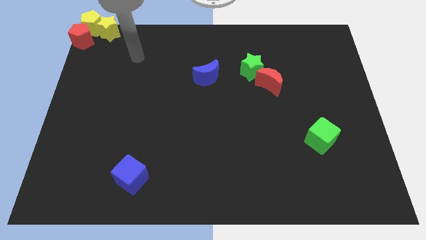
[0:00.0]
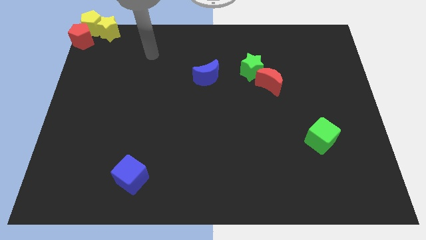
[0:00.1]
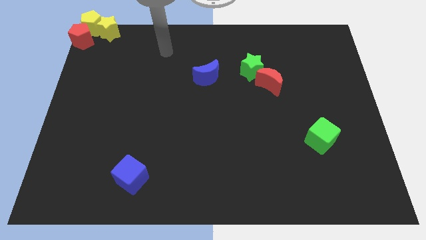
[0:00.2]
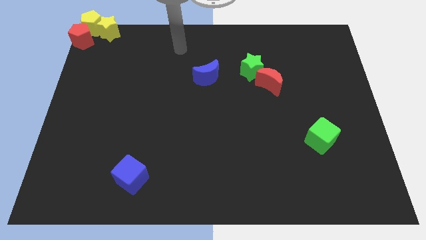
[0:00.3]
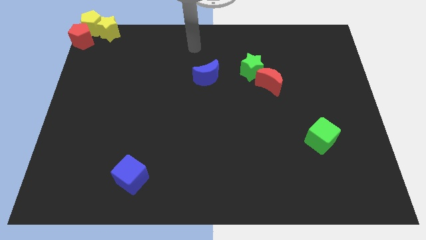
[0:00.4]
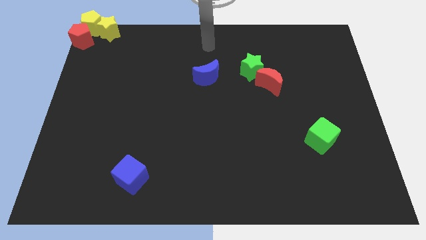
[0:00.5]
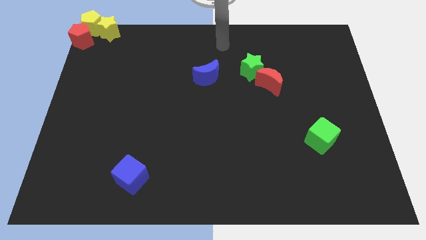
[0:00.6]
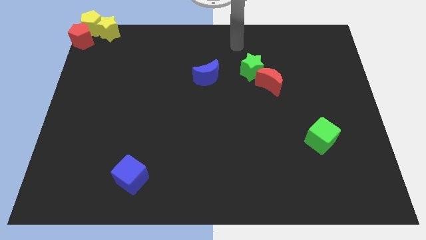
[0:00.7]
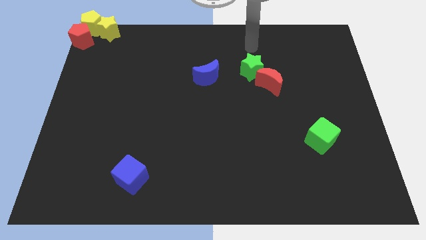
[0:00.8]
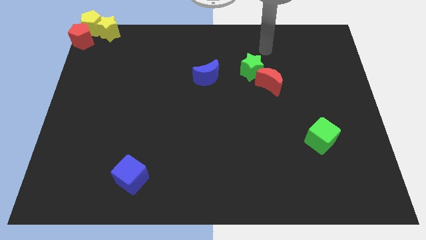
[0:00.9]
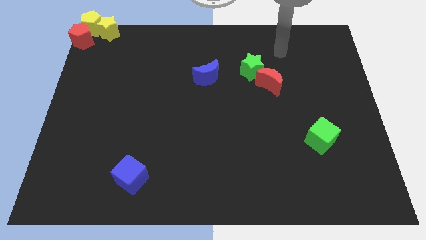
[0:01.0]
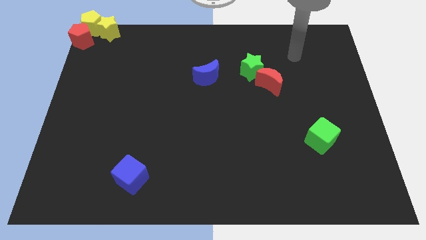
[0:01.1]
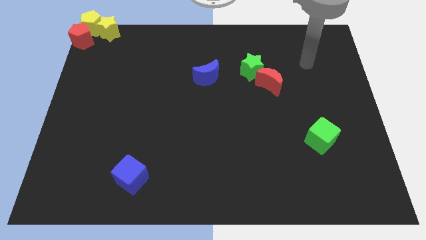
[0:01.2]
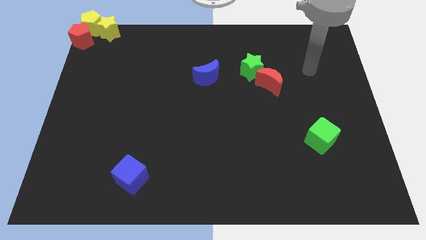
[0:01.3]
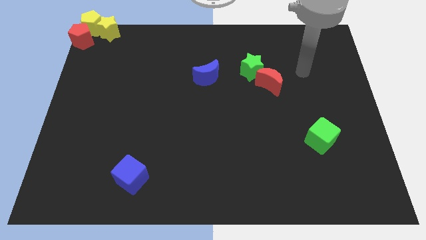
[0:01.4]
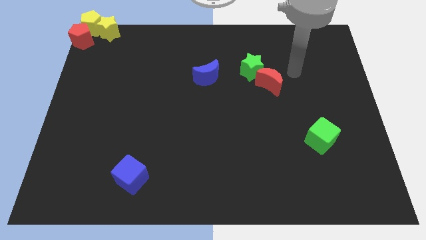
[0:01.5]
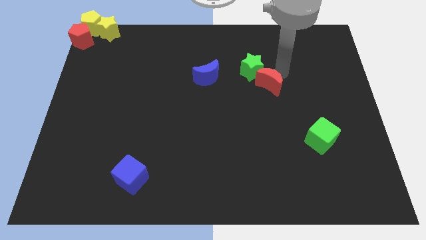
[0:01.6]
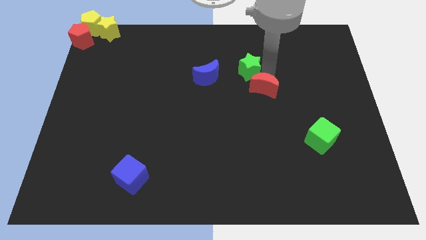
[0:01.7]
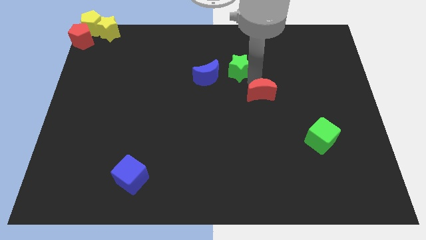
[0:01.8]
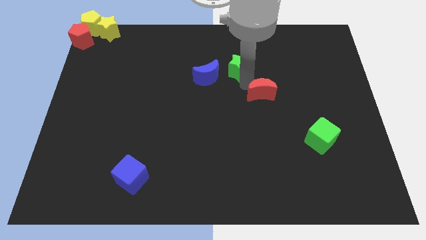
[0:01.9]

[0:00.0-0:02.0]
place your arm between green star and red moon

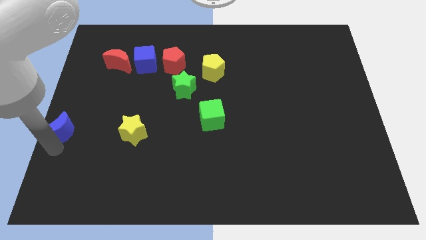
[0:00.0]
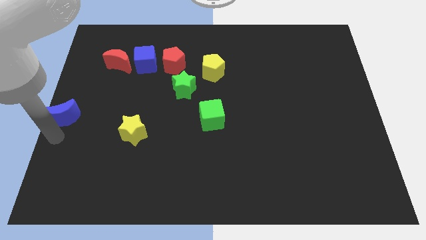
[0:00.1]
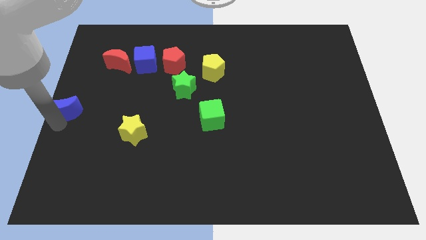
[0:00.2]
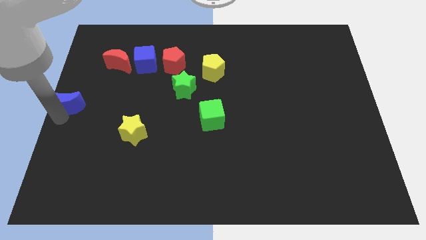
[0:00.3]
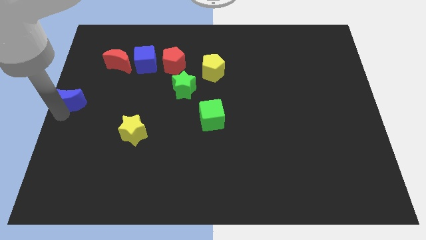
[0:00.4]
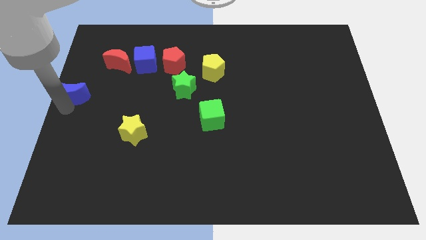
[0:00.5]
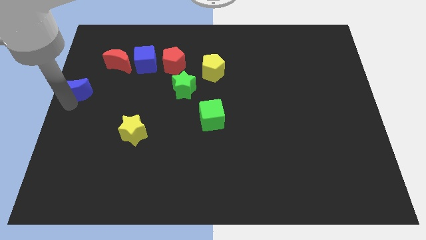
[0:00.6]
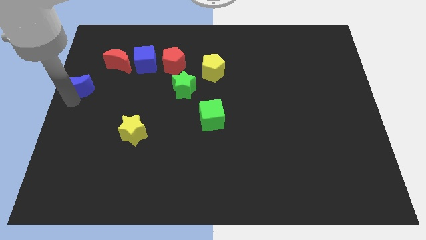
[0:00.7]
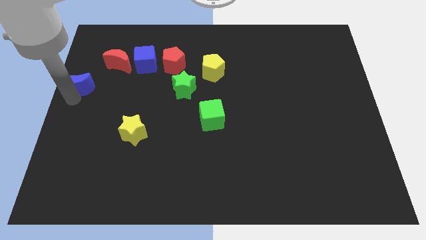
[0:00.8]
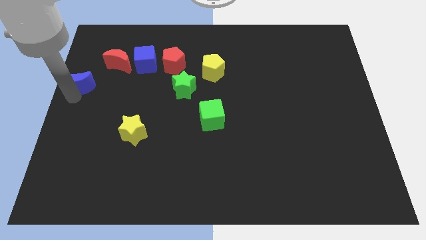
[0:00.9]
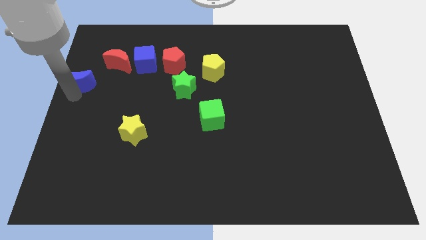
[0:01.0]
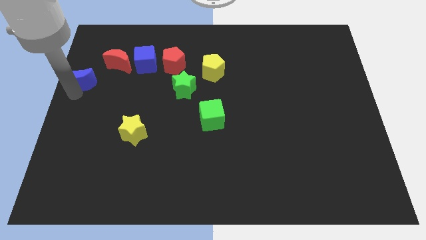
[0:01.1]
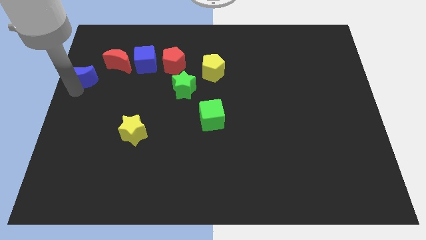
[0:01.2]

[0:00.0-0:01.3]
drag the blue crescent towards the horizontal line of blocks

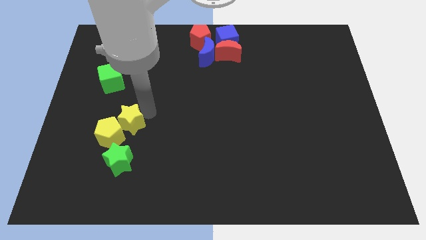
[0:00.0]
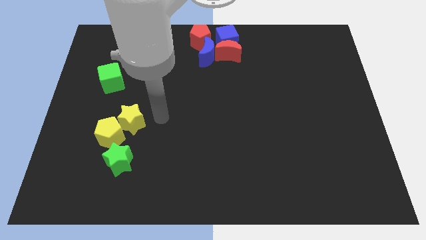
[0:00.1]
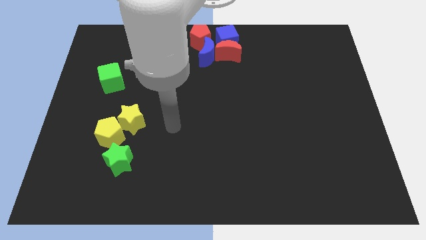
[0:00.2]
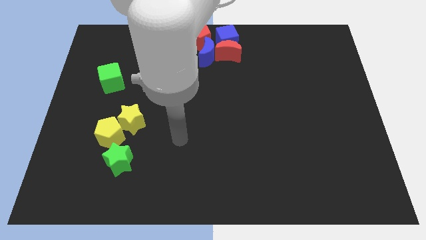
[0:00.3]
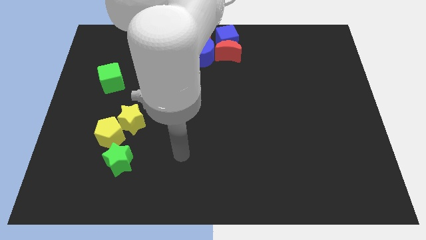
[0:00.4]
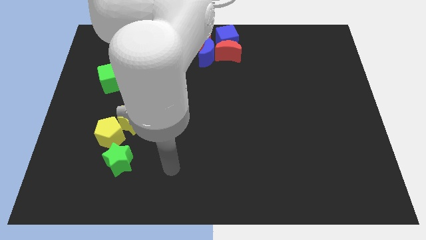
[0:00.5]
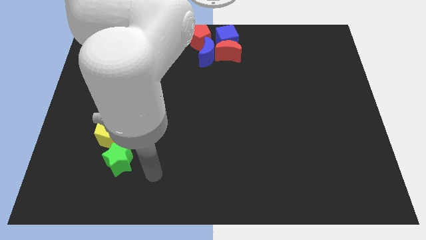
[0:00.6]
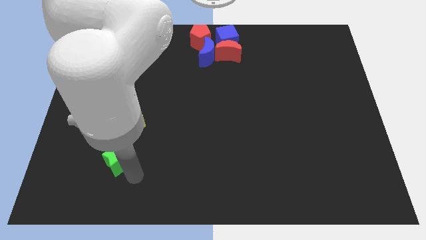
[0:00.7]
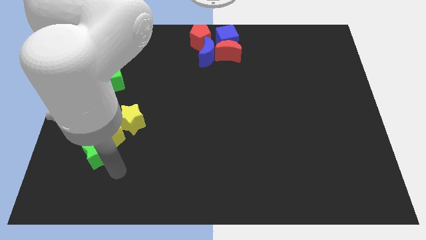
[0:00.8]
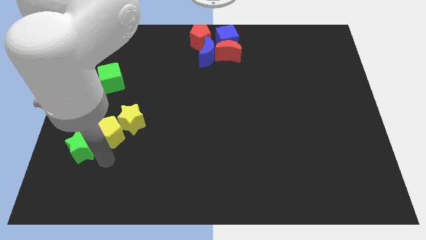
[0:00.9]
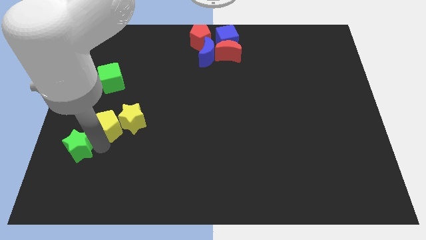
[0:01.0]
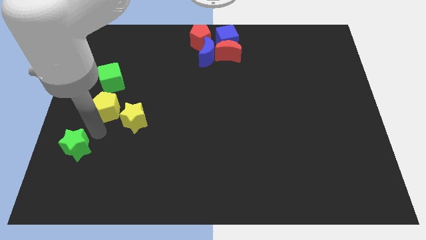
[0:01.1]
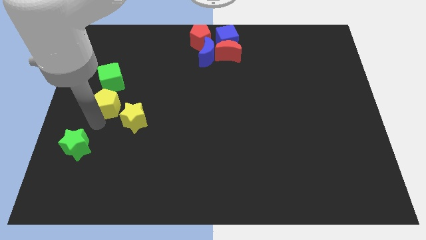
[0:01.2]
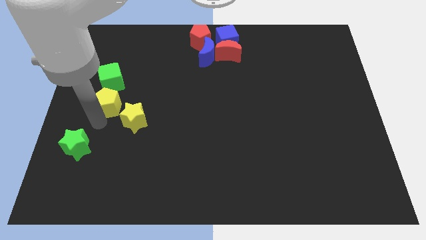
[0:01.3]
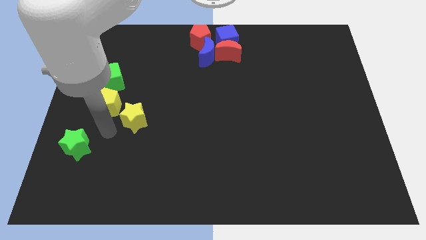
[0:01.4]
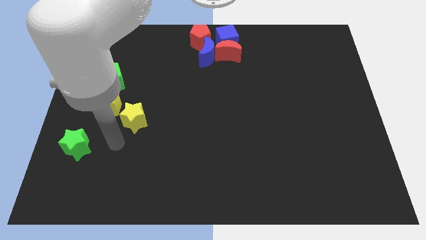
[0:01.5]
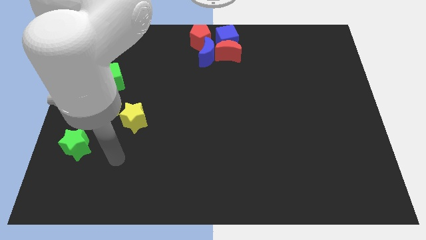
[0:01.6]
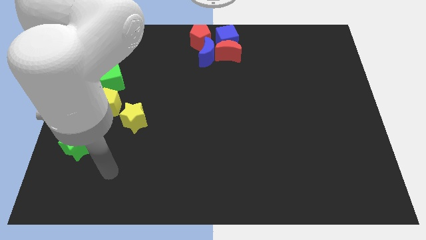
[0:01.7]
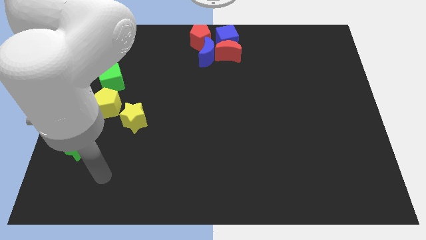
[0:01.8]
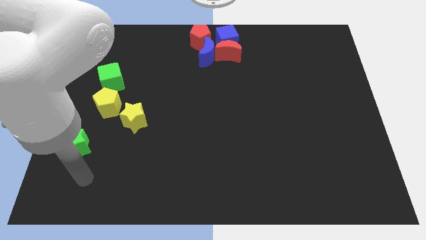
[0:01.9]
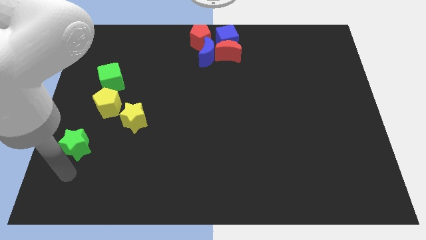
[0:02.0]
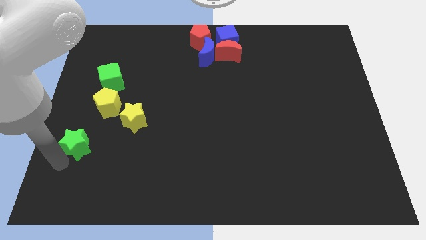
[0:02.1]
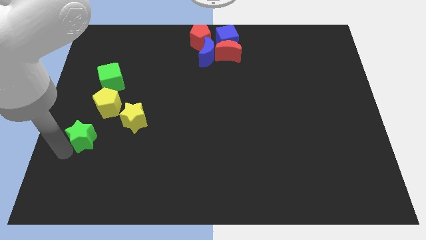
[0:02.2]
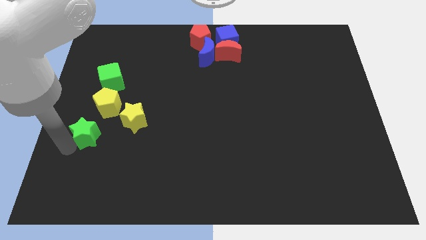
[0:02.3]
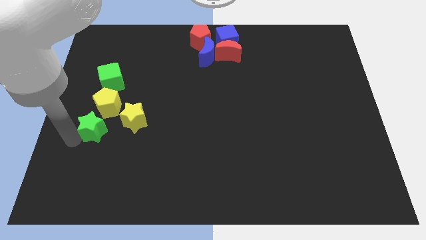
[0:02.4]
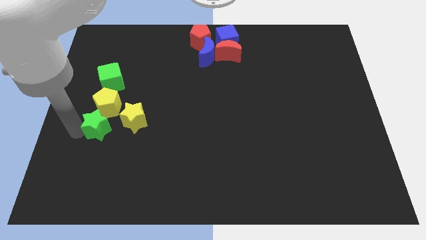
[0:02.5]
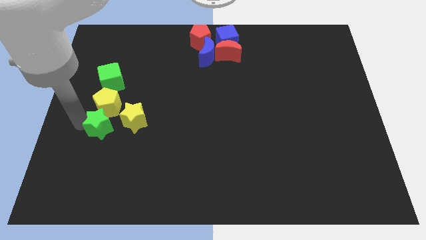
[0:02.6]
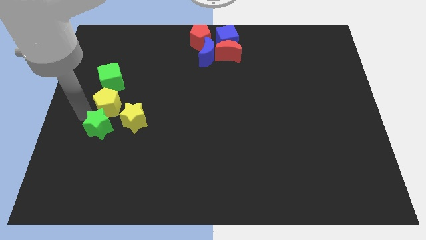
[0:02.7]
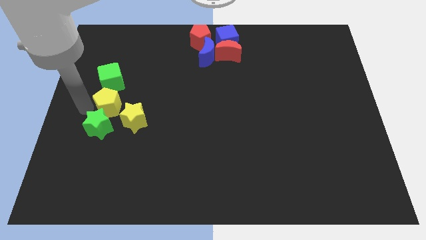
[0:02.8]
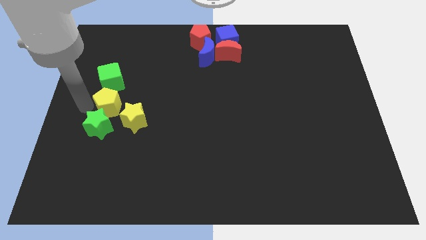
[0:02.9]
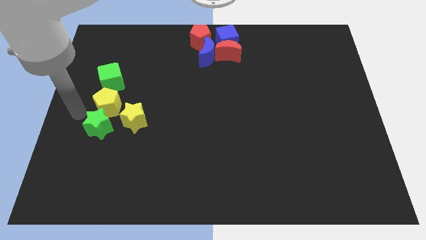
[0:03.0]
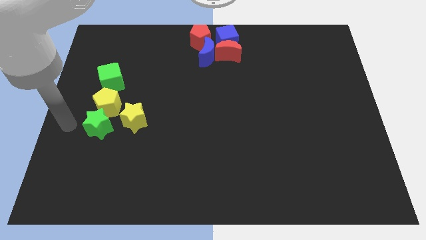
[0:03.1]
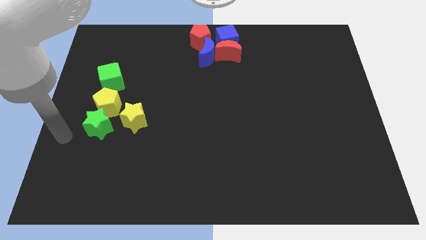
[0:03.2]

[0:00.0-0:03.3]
slide yellow blocks and a green star into green cube

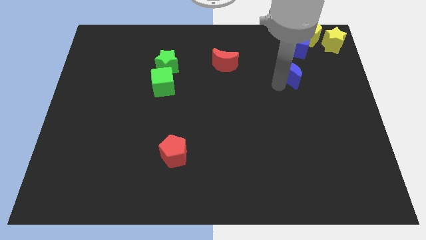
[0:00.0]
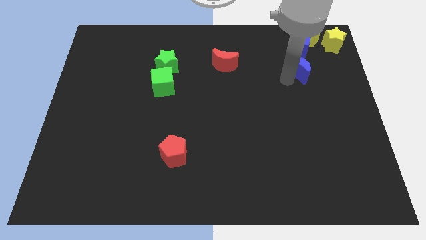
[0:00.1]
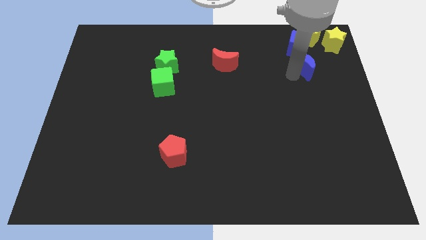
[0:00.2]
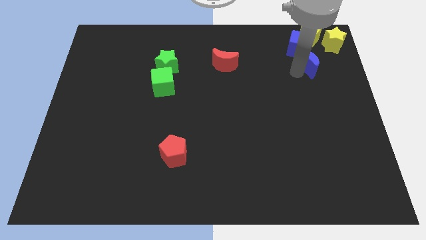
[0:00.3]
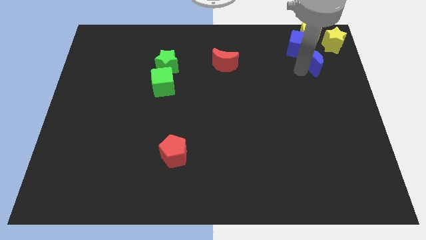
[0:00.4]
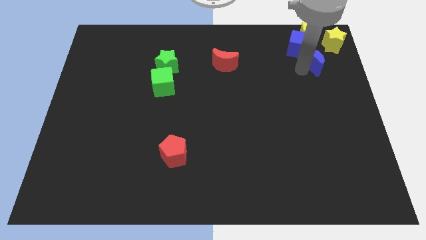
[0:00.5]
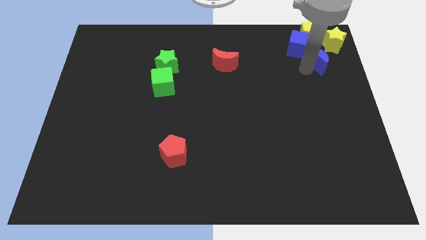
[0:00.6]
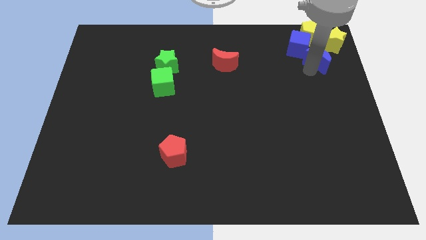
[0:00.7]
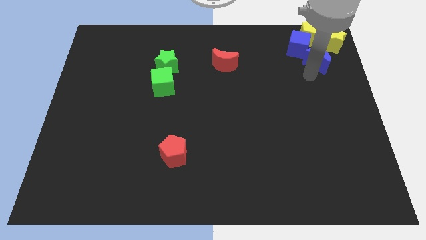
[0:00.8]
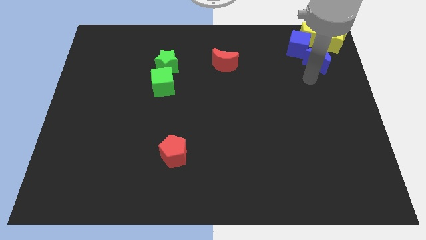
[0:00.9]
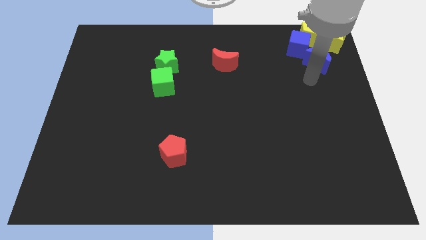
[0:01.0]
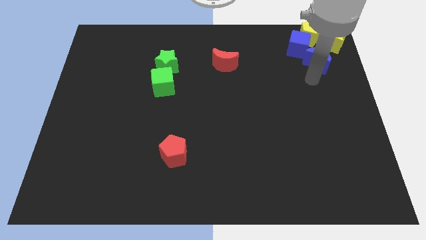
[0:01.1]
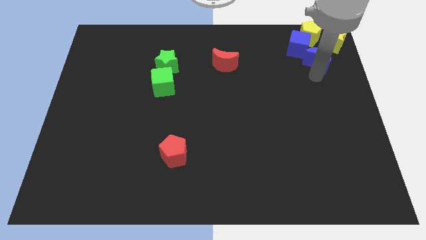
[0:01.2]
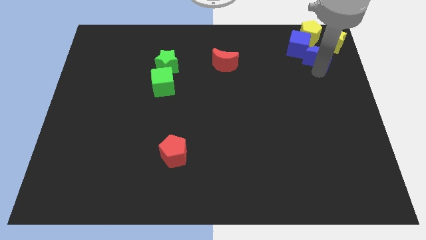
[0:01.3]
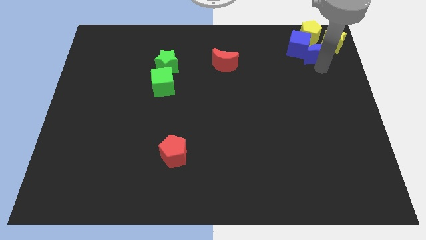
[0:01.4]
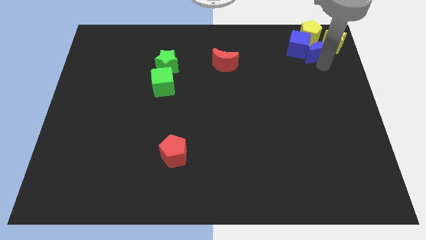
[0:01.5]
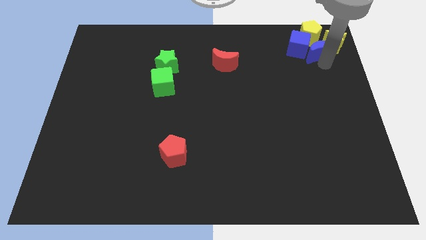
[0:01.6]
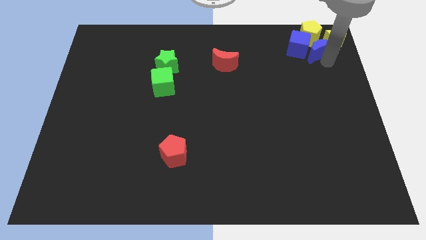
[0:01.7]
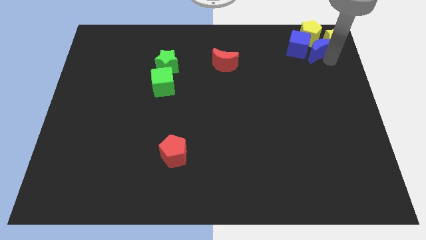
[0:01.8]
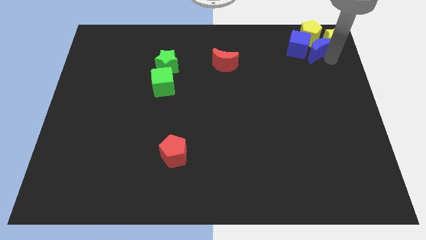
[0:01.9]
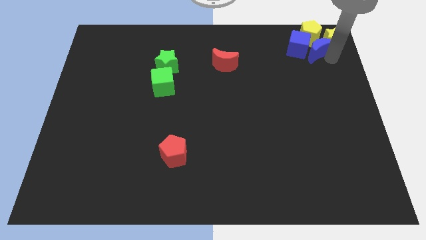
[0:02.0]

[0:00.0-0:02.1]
move the blue moon to the bottom left of the yellow star

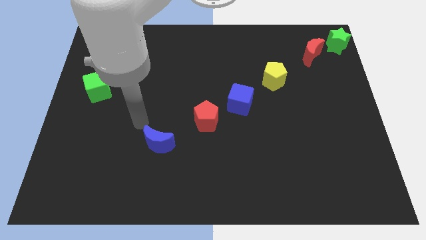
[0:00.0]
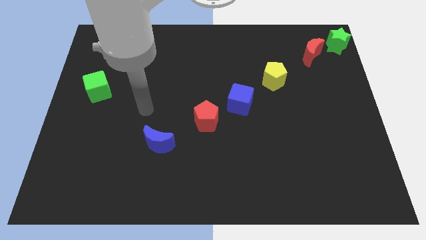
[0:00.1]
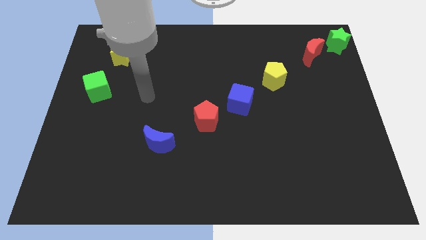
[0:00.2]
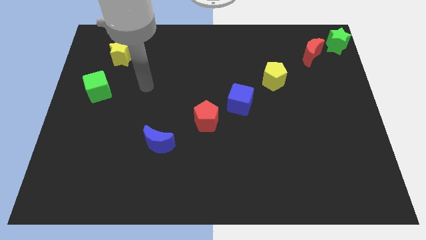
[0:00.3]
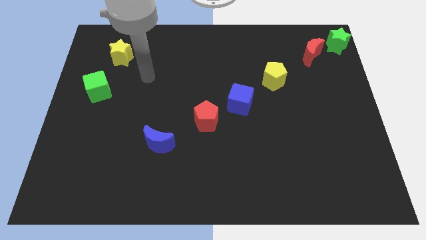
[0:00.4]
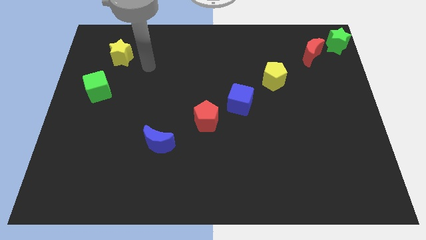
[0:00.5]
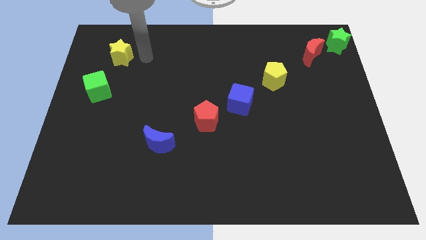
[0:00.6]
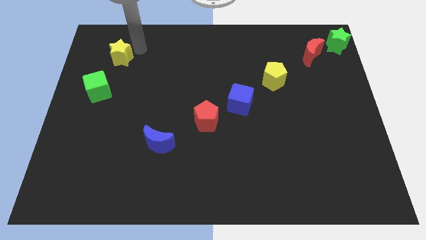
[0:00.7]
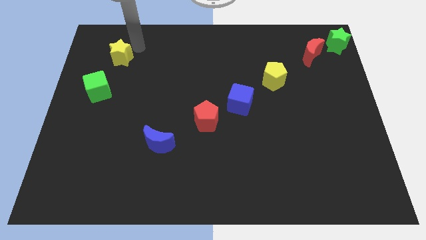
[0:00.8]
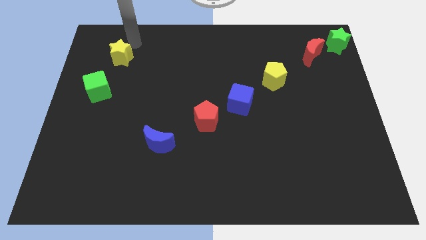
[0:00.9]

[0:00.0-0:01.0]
place your arm at the top right side of yellow star
